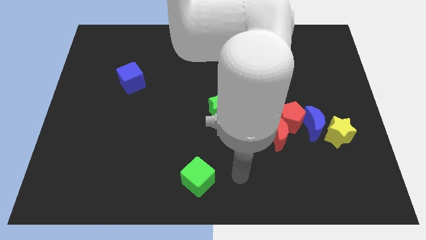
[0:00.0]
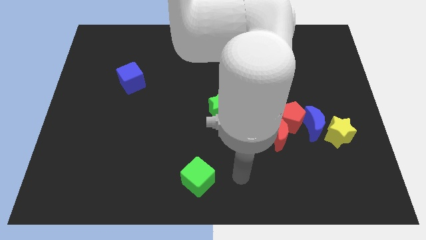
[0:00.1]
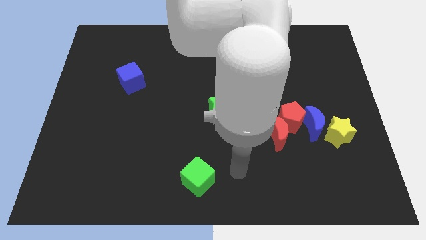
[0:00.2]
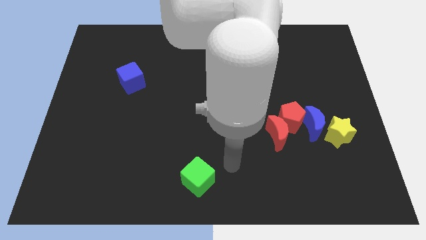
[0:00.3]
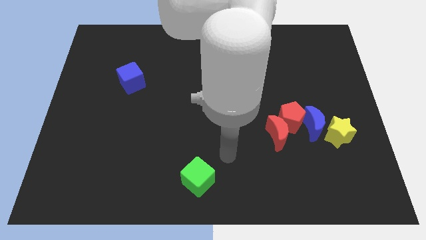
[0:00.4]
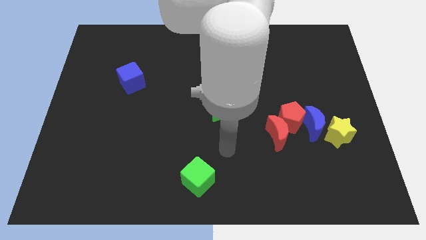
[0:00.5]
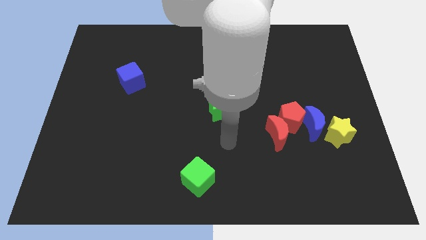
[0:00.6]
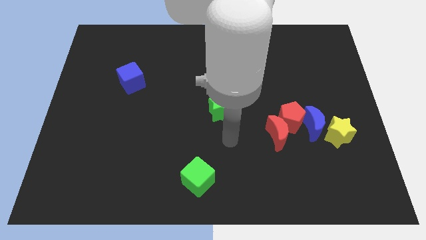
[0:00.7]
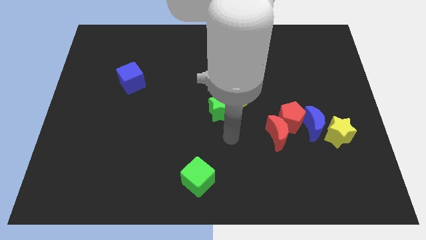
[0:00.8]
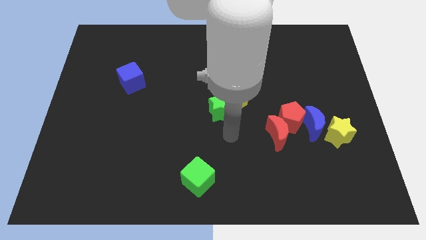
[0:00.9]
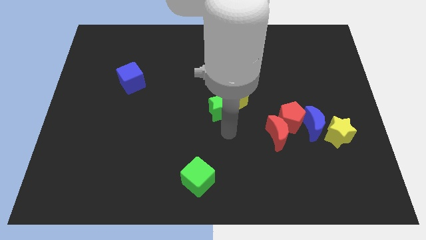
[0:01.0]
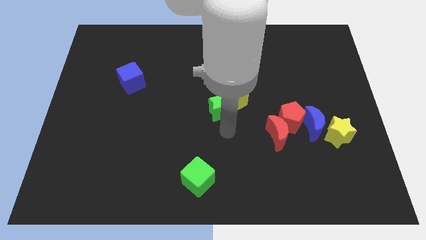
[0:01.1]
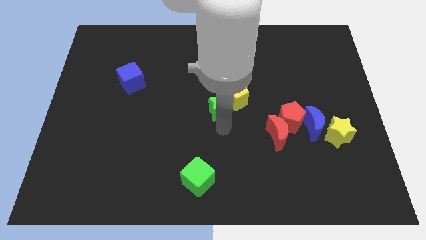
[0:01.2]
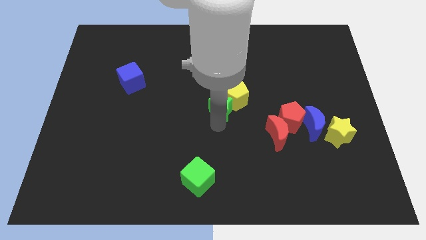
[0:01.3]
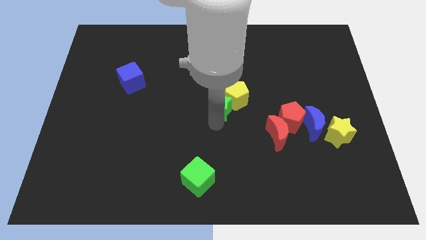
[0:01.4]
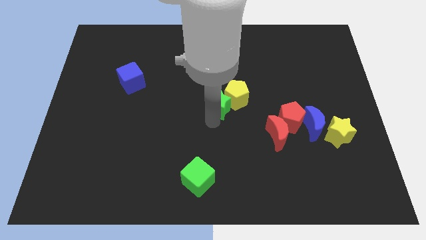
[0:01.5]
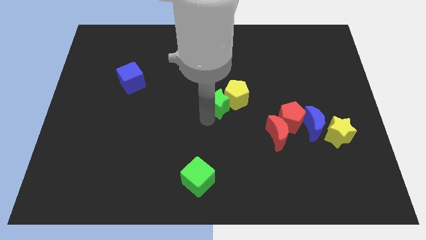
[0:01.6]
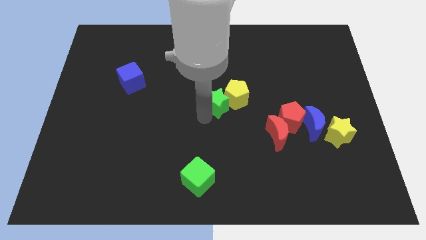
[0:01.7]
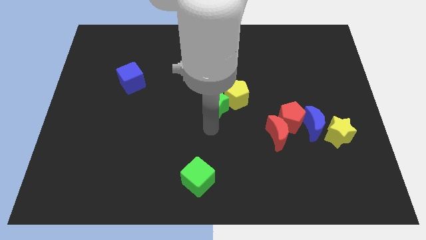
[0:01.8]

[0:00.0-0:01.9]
point your arm at the bottom of the green star

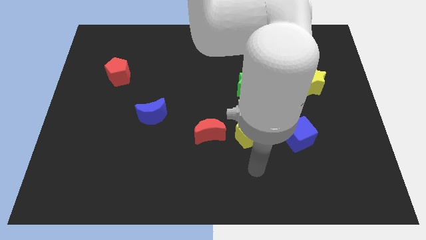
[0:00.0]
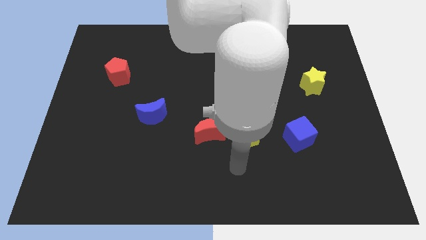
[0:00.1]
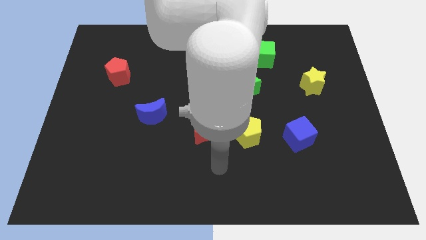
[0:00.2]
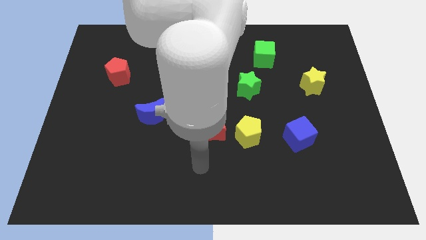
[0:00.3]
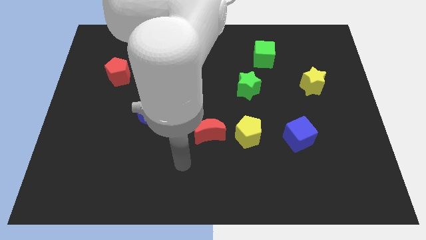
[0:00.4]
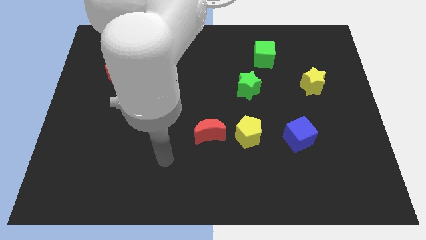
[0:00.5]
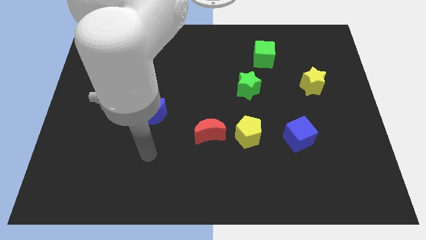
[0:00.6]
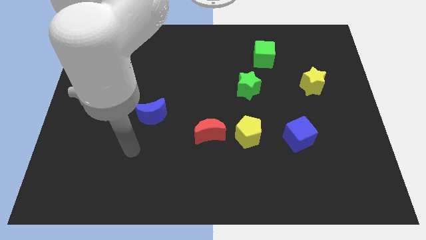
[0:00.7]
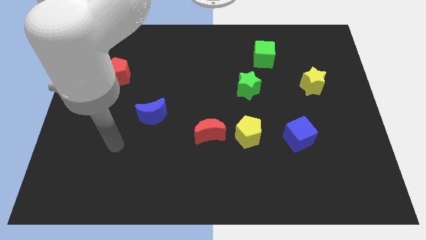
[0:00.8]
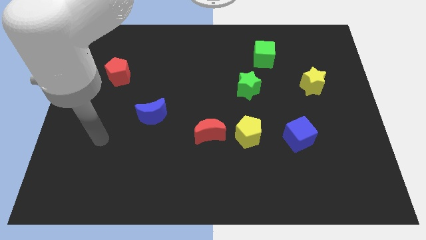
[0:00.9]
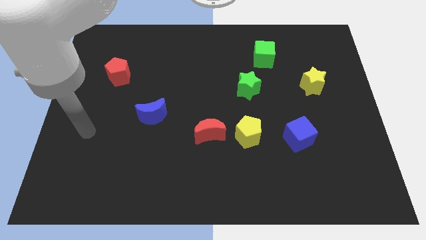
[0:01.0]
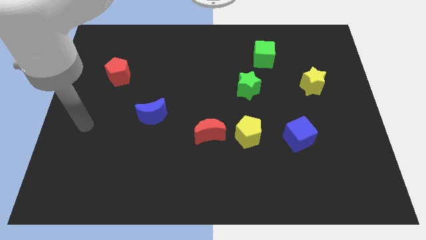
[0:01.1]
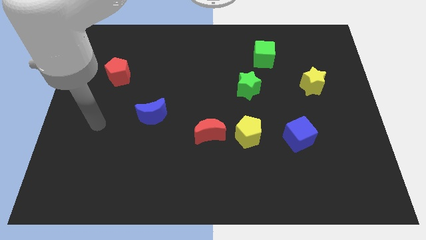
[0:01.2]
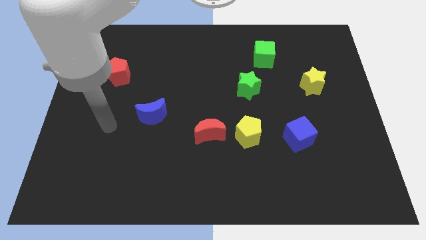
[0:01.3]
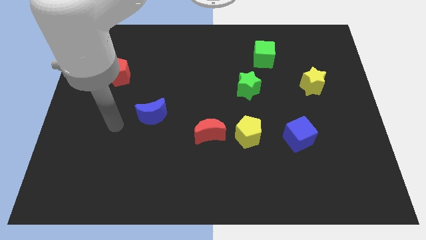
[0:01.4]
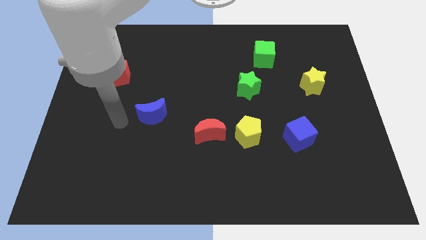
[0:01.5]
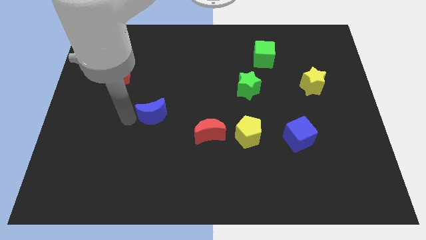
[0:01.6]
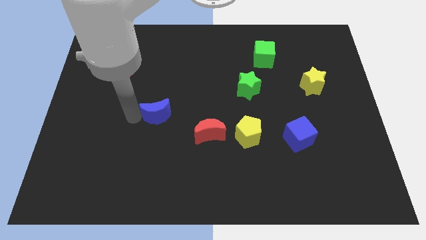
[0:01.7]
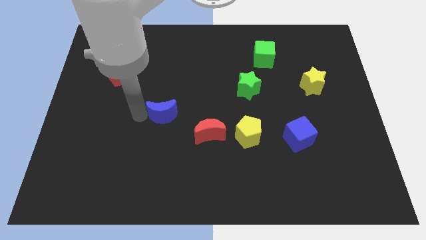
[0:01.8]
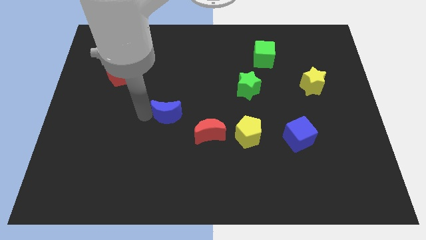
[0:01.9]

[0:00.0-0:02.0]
push the blue moon slightly to the right

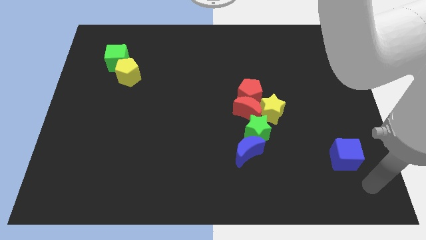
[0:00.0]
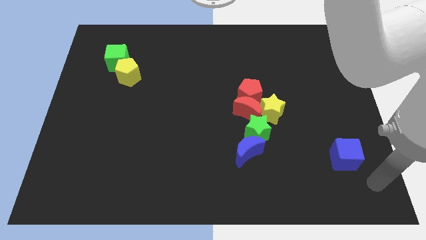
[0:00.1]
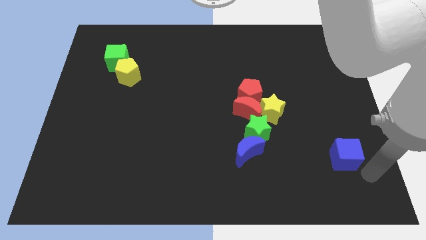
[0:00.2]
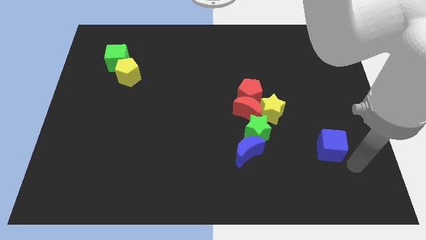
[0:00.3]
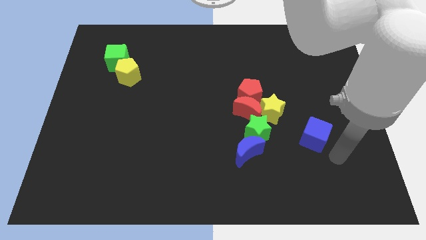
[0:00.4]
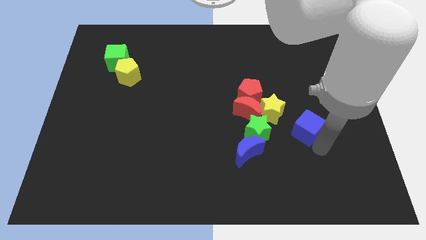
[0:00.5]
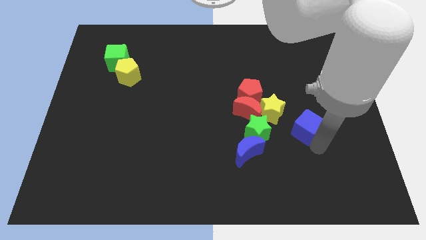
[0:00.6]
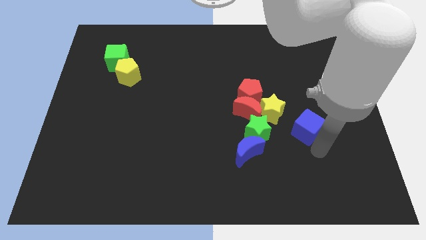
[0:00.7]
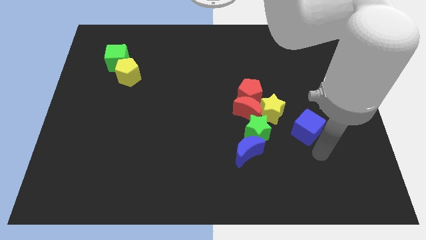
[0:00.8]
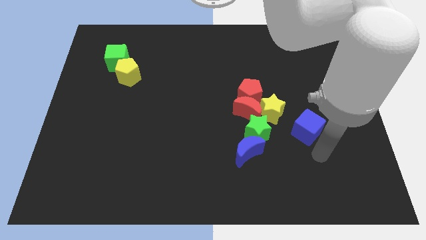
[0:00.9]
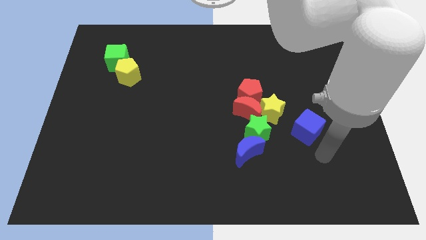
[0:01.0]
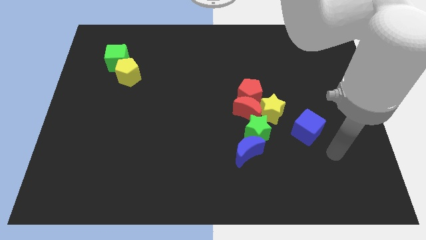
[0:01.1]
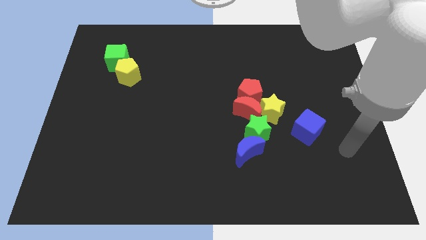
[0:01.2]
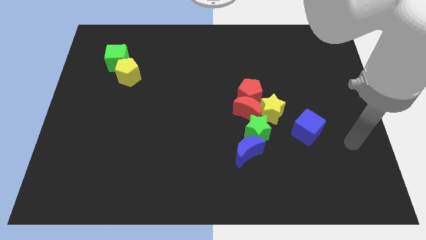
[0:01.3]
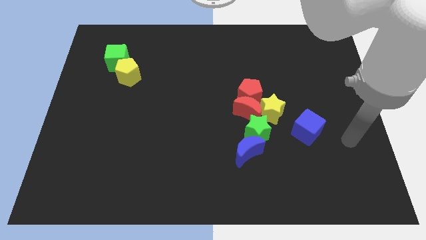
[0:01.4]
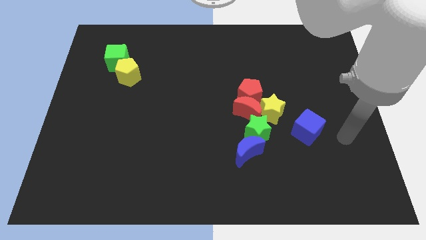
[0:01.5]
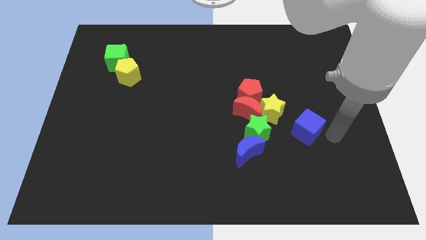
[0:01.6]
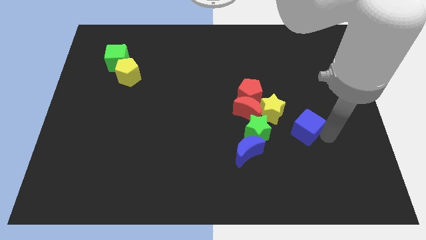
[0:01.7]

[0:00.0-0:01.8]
push the blue cube toward the right of the yellow star

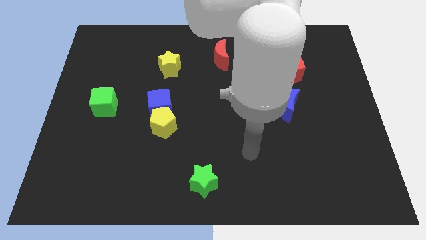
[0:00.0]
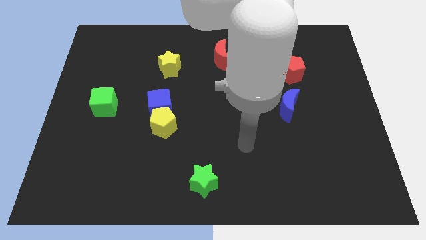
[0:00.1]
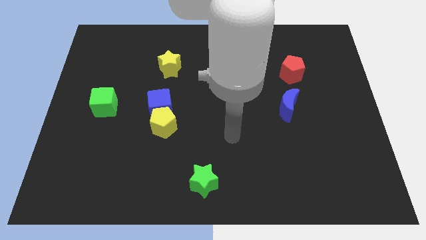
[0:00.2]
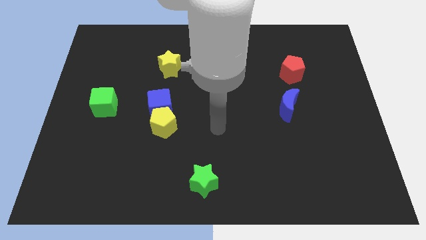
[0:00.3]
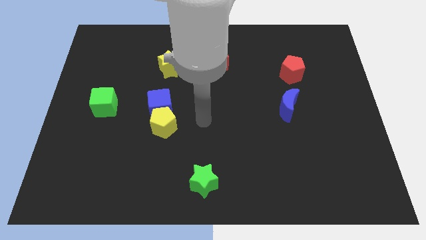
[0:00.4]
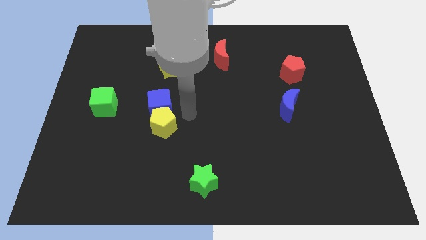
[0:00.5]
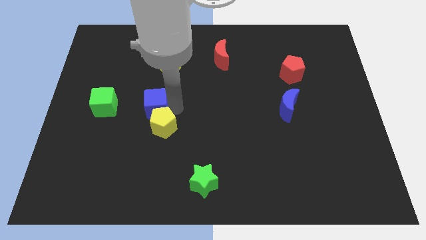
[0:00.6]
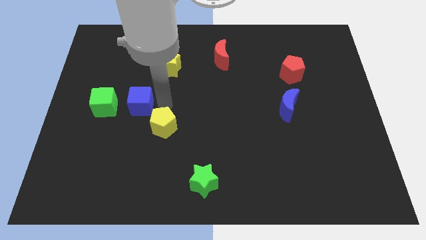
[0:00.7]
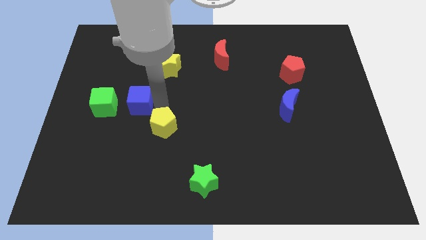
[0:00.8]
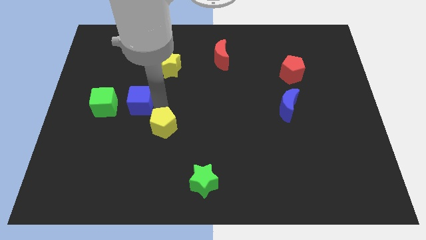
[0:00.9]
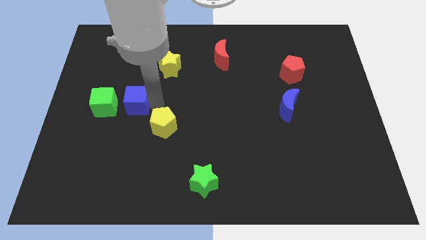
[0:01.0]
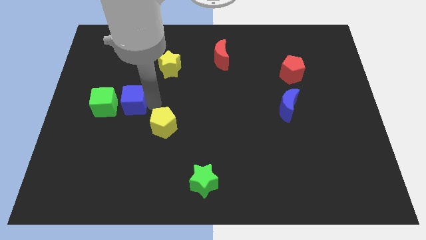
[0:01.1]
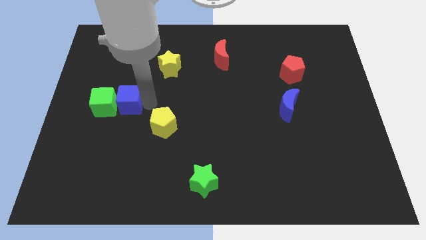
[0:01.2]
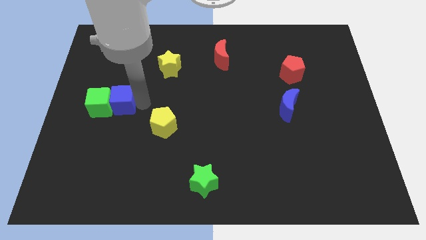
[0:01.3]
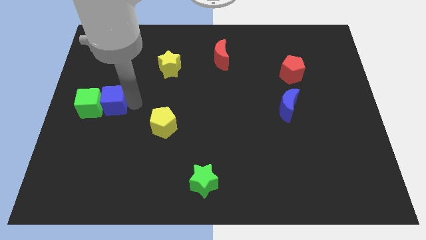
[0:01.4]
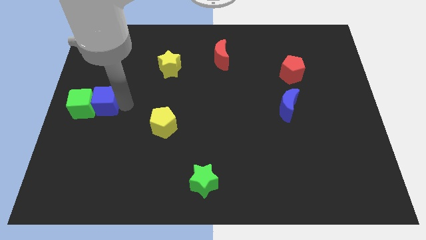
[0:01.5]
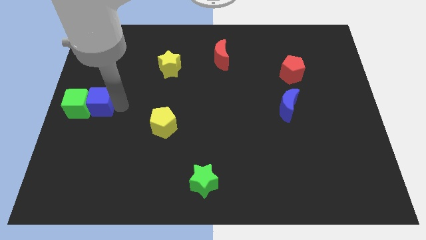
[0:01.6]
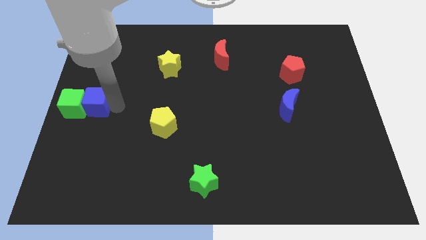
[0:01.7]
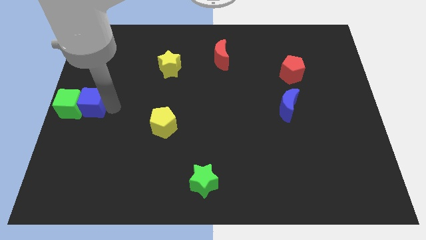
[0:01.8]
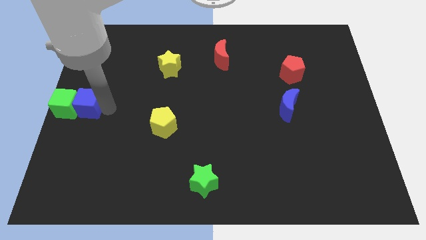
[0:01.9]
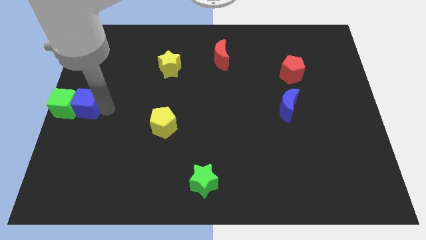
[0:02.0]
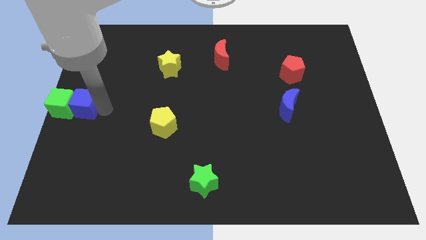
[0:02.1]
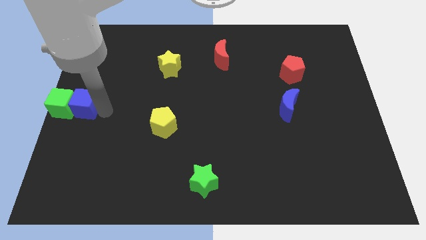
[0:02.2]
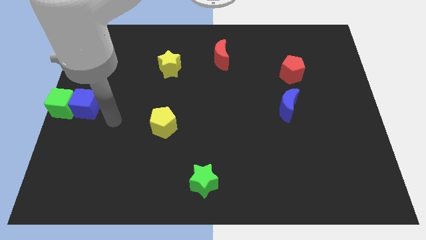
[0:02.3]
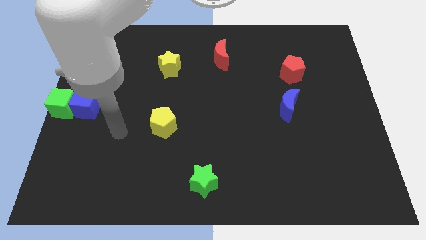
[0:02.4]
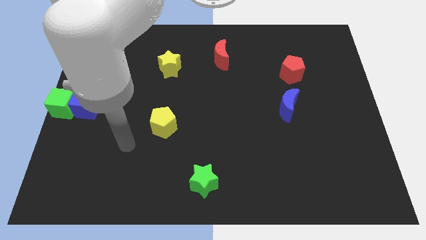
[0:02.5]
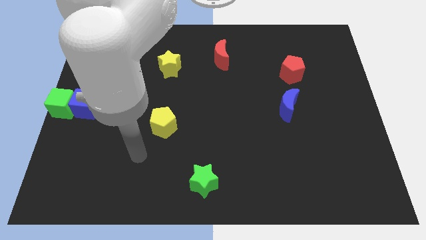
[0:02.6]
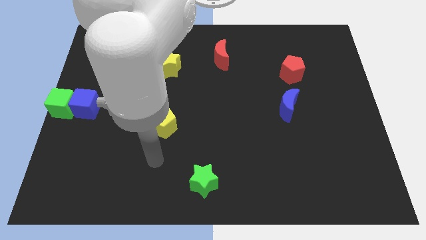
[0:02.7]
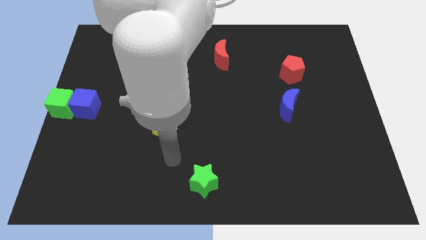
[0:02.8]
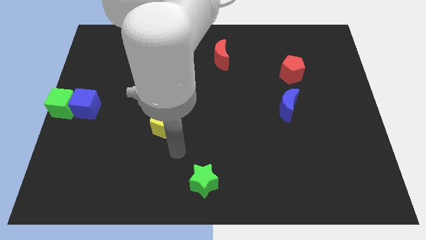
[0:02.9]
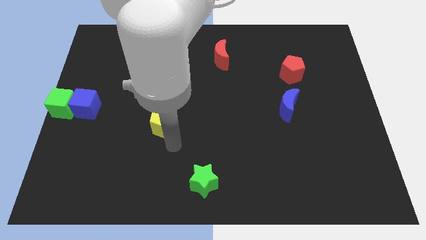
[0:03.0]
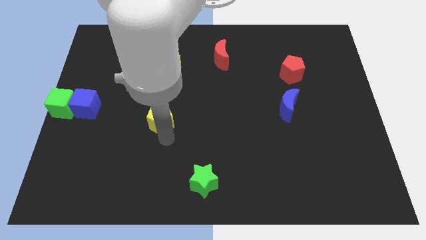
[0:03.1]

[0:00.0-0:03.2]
place the arm down to the yellow pentagon
